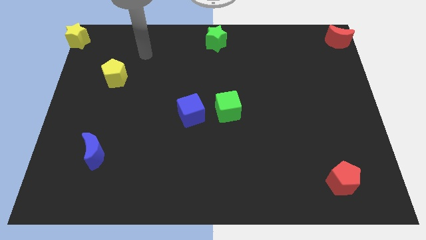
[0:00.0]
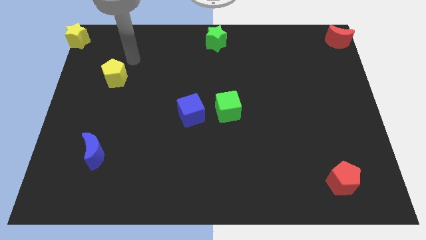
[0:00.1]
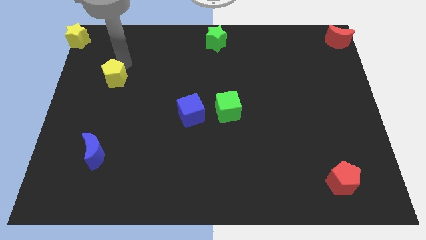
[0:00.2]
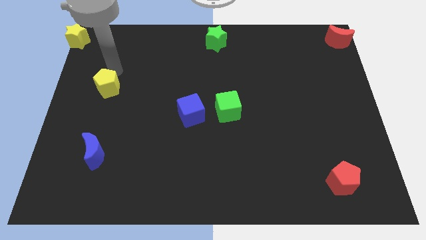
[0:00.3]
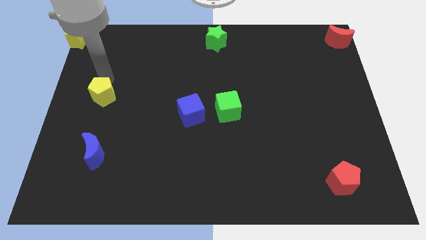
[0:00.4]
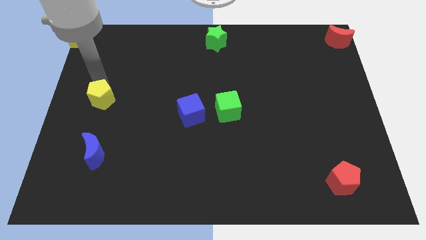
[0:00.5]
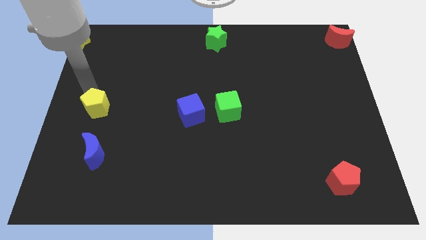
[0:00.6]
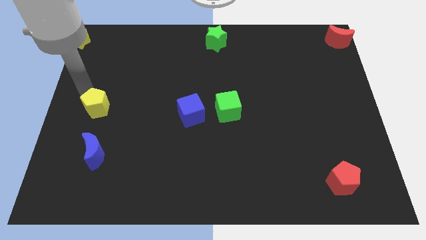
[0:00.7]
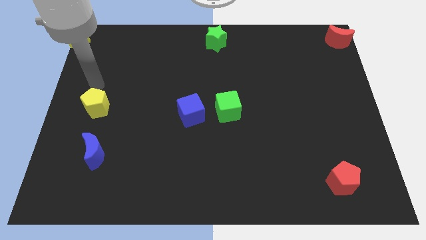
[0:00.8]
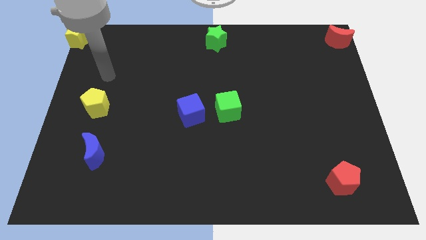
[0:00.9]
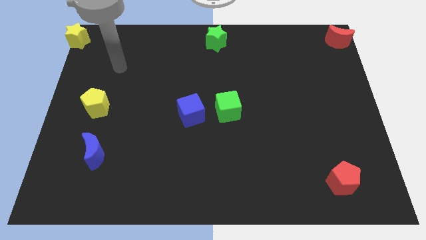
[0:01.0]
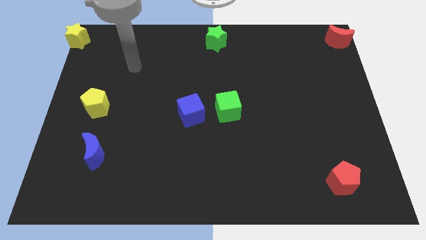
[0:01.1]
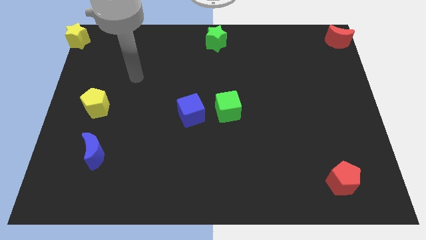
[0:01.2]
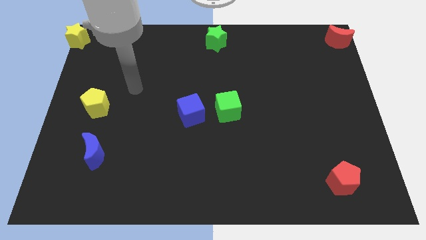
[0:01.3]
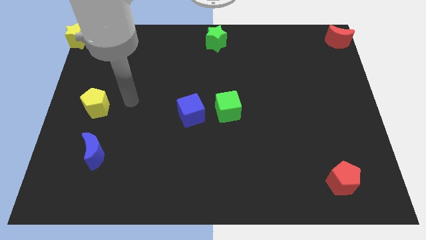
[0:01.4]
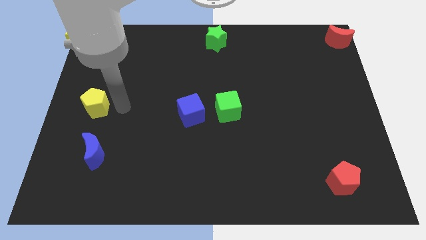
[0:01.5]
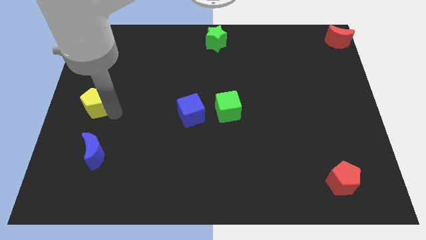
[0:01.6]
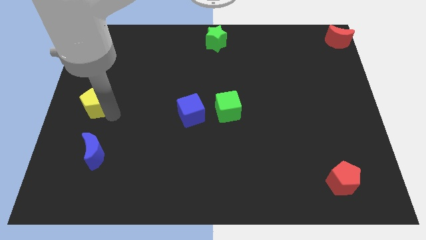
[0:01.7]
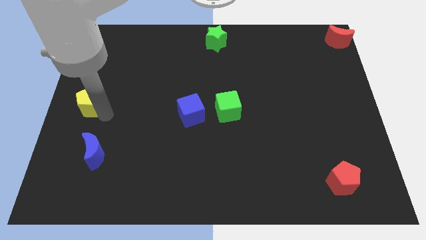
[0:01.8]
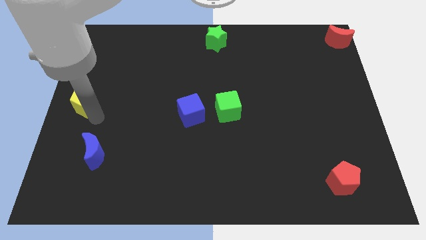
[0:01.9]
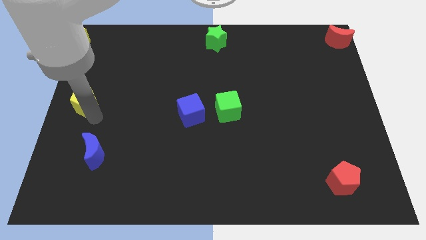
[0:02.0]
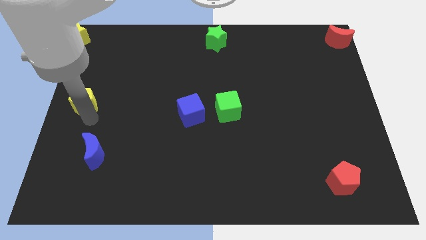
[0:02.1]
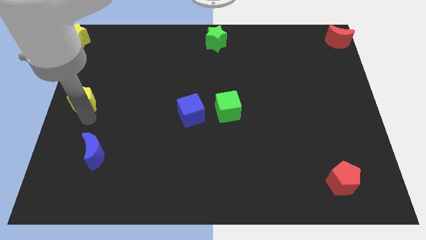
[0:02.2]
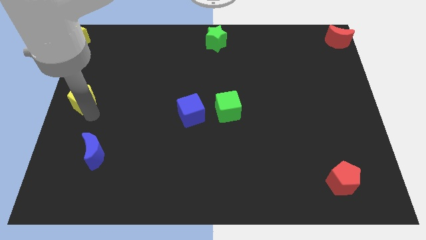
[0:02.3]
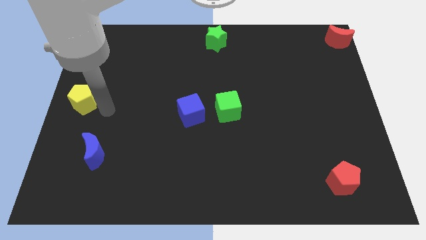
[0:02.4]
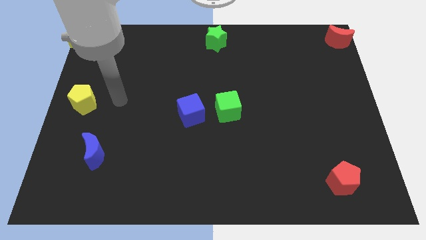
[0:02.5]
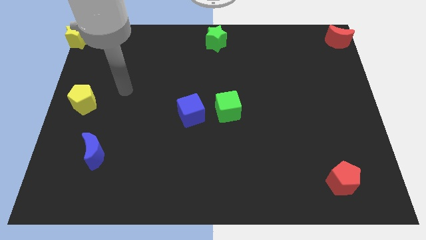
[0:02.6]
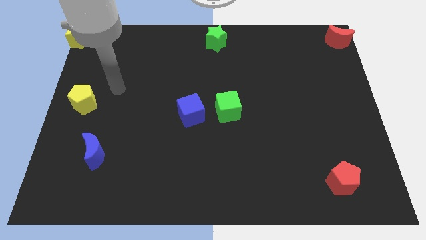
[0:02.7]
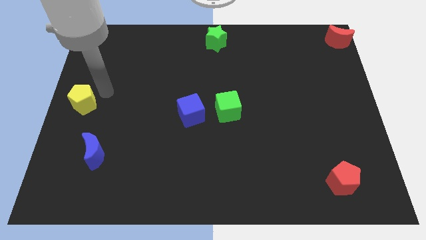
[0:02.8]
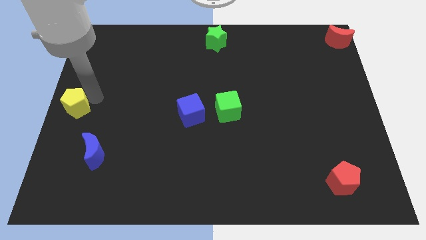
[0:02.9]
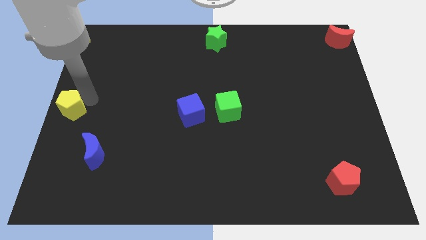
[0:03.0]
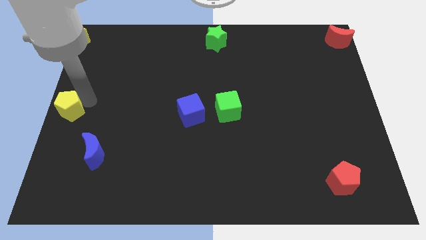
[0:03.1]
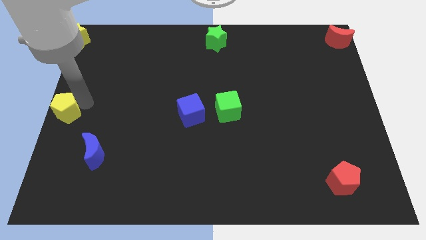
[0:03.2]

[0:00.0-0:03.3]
move the yellow pentagon to the centre left of the board

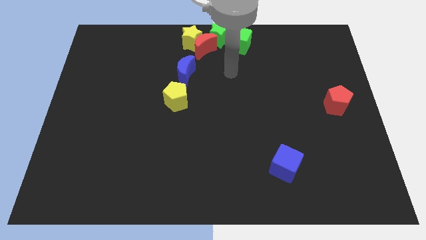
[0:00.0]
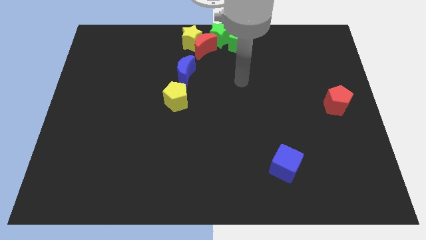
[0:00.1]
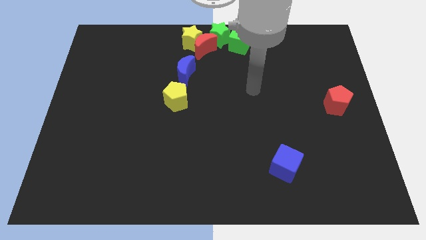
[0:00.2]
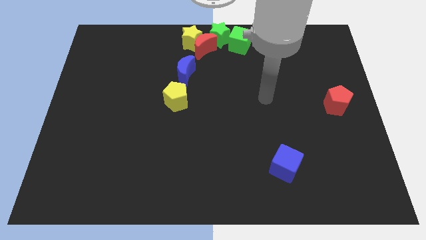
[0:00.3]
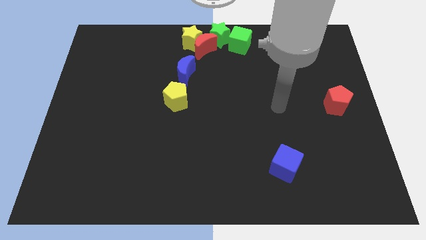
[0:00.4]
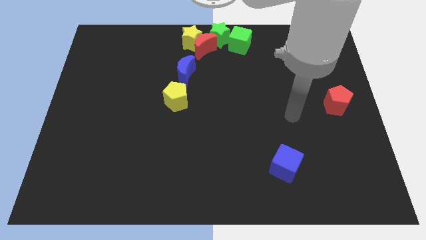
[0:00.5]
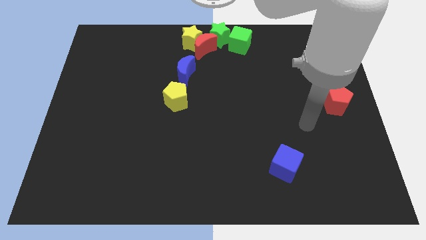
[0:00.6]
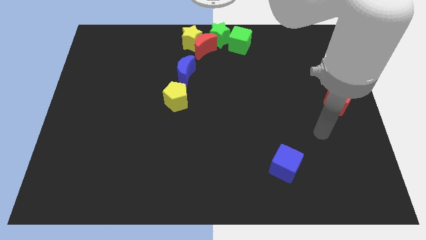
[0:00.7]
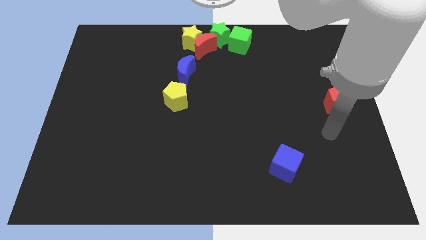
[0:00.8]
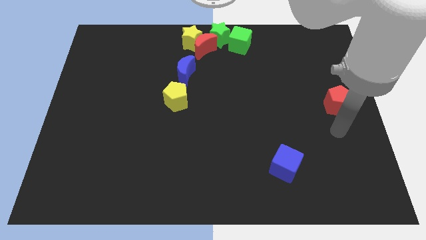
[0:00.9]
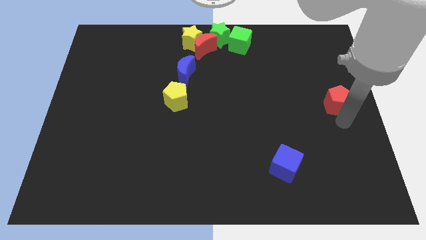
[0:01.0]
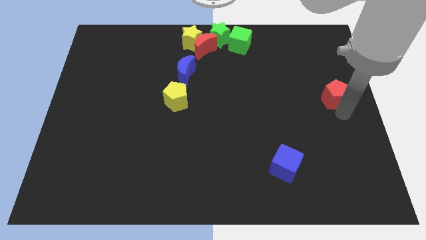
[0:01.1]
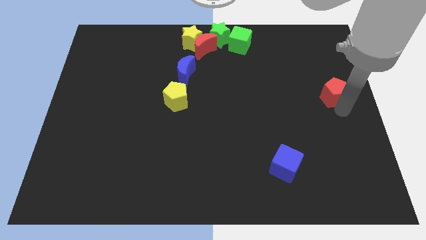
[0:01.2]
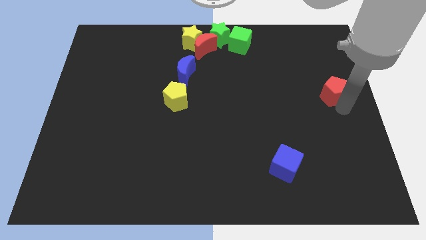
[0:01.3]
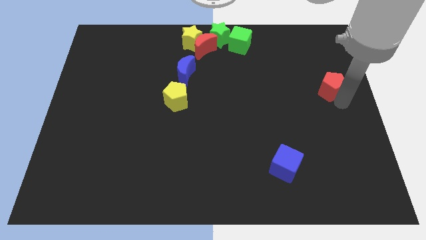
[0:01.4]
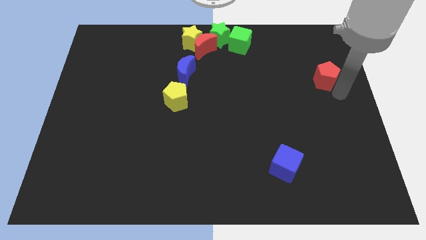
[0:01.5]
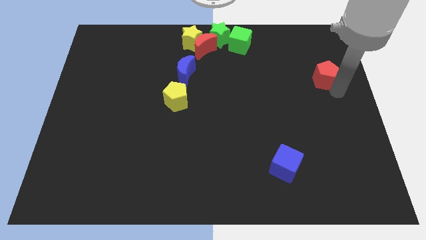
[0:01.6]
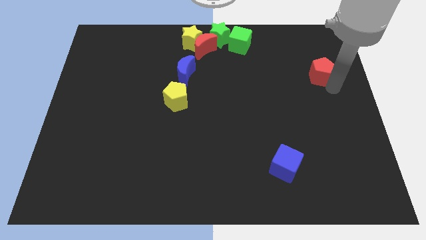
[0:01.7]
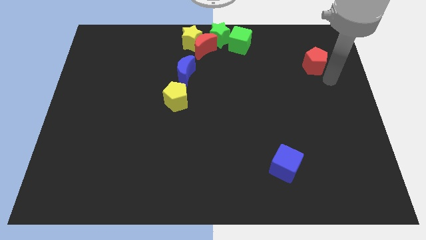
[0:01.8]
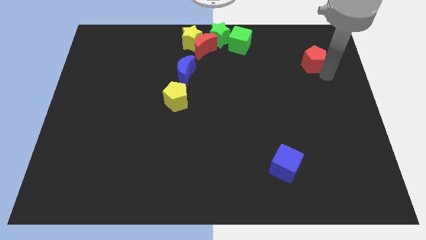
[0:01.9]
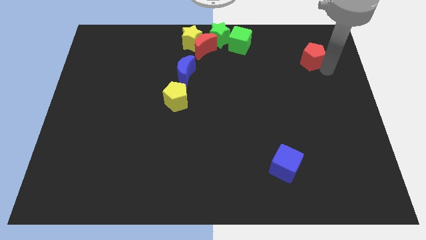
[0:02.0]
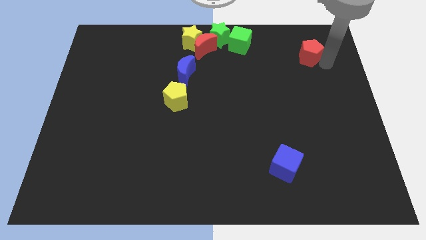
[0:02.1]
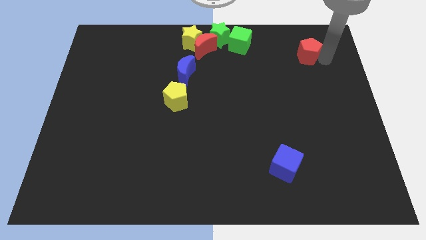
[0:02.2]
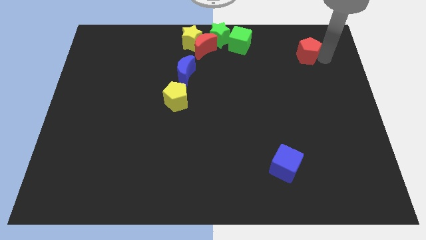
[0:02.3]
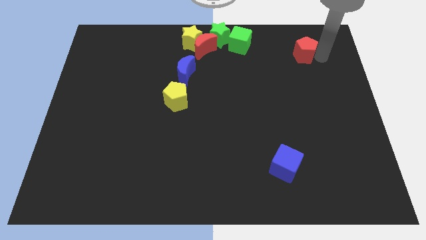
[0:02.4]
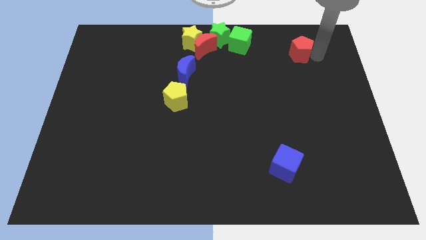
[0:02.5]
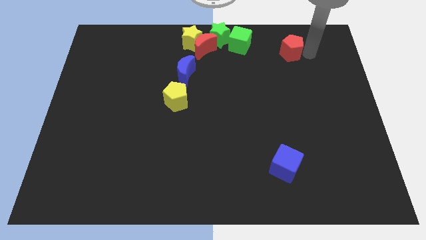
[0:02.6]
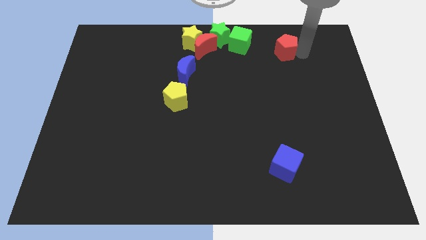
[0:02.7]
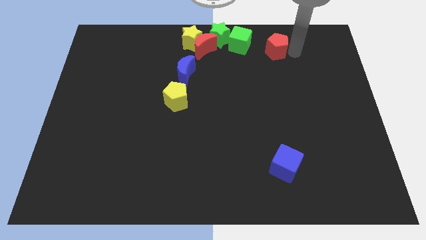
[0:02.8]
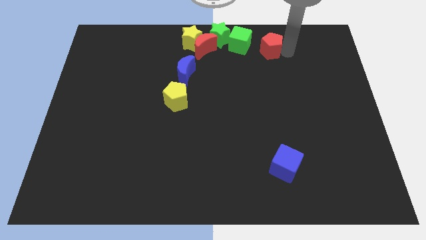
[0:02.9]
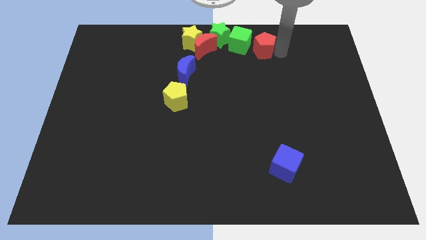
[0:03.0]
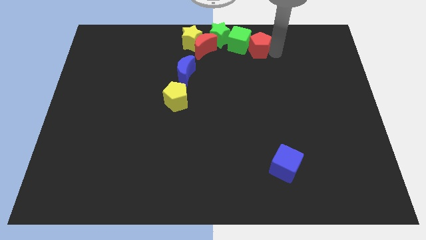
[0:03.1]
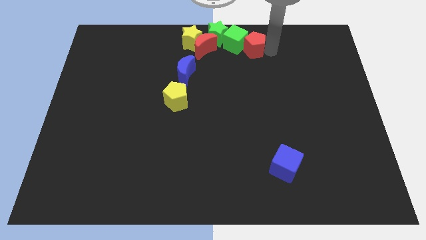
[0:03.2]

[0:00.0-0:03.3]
drag the red pentagon into the green cube

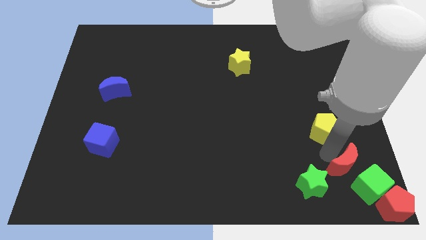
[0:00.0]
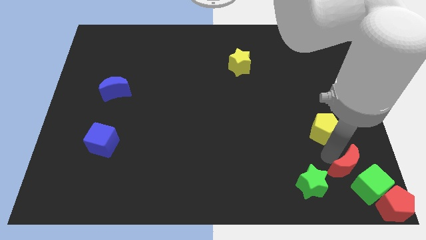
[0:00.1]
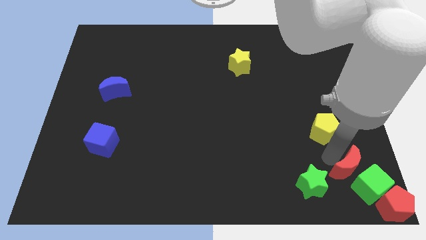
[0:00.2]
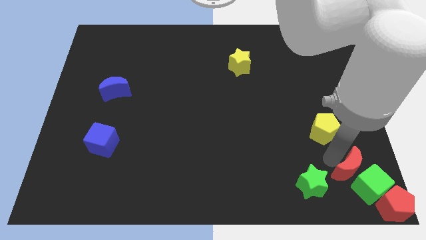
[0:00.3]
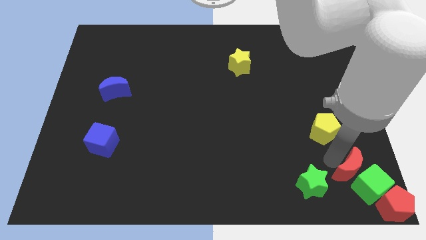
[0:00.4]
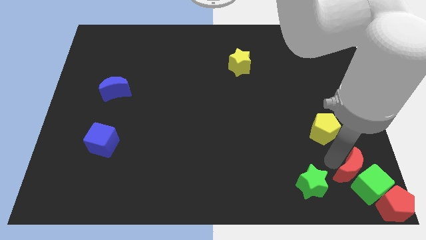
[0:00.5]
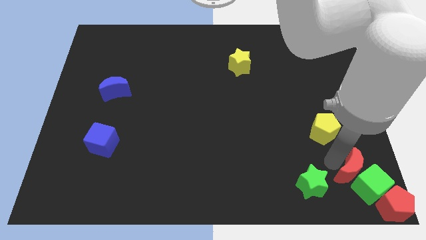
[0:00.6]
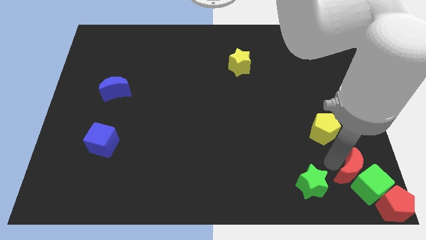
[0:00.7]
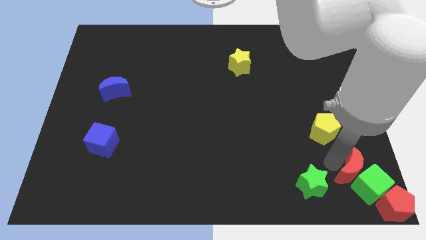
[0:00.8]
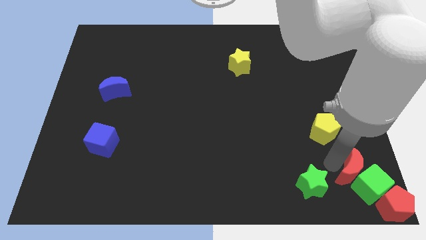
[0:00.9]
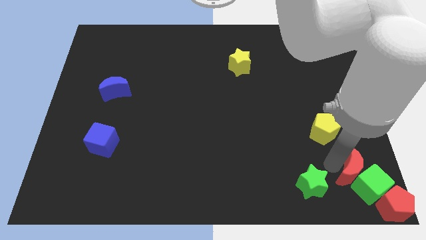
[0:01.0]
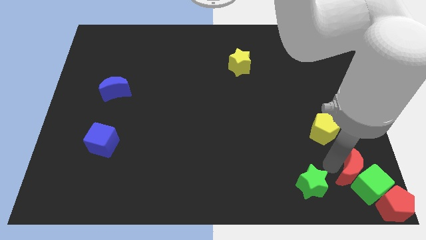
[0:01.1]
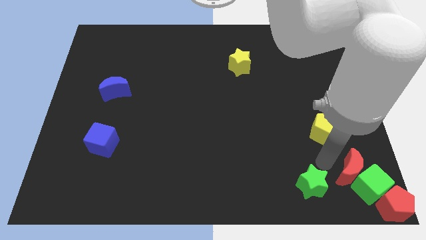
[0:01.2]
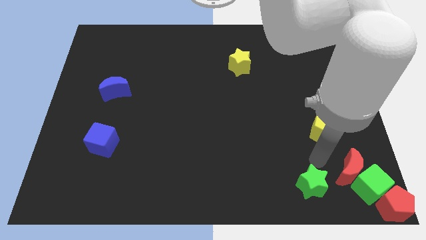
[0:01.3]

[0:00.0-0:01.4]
push the red crescent diagonally to the top left of the green cube

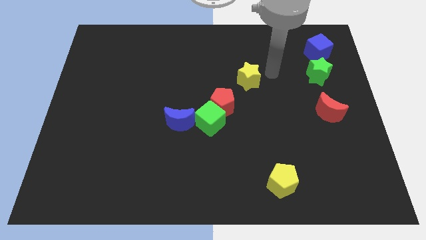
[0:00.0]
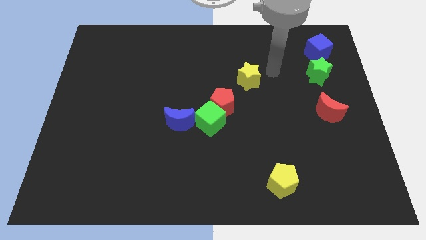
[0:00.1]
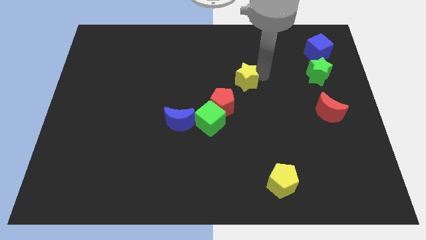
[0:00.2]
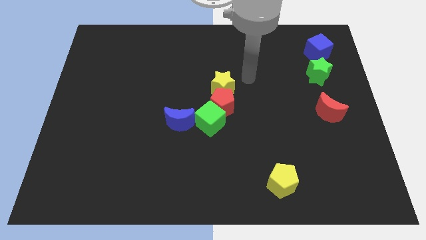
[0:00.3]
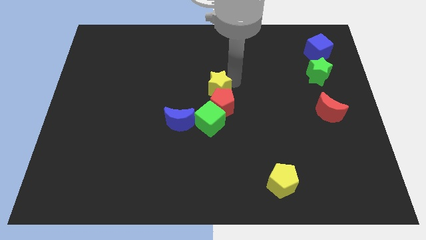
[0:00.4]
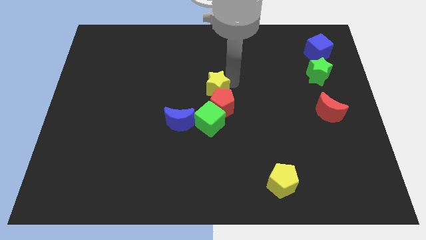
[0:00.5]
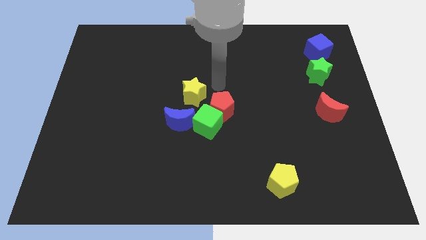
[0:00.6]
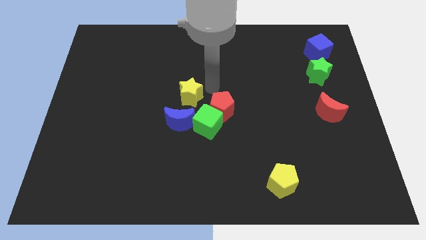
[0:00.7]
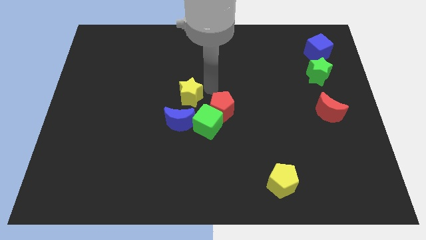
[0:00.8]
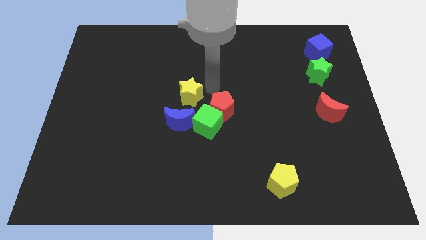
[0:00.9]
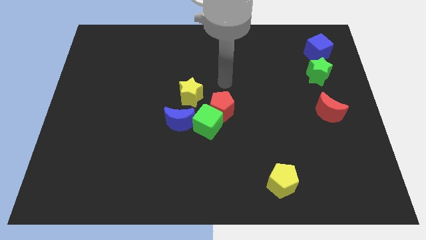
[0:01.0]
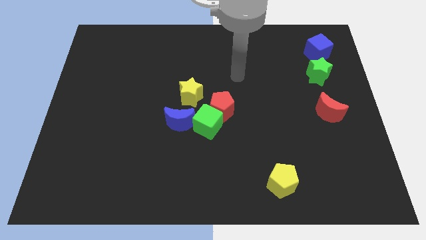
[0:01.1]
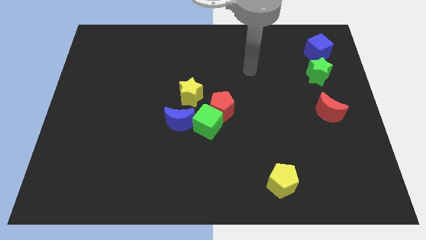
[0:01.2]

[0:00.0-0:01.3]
push yellow star above blue crescent
